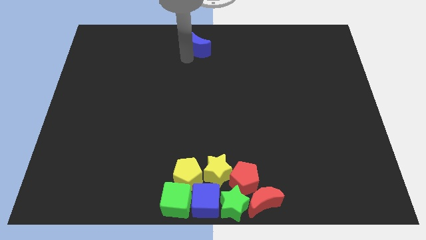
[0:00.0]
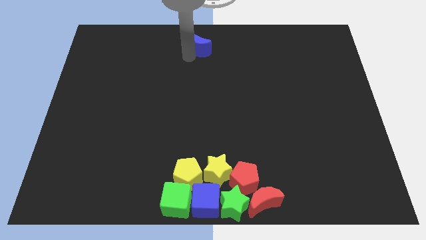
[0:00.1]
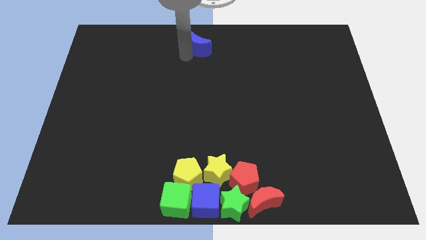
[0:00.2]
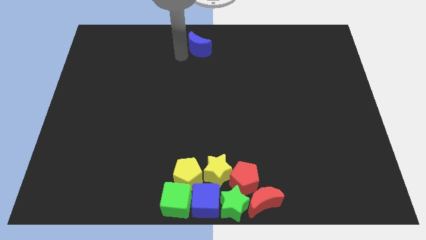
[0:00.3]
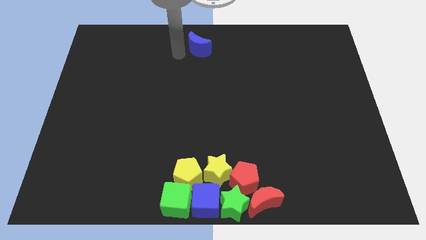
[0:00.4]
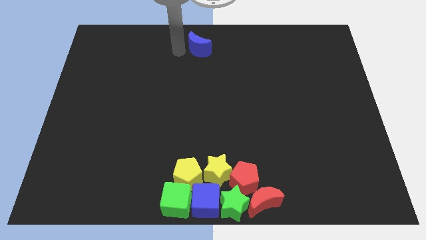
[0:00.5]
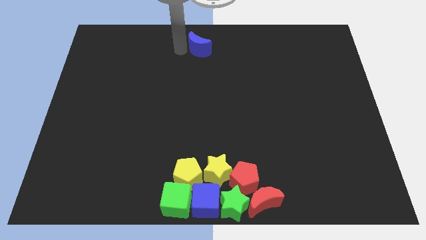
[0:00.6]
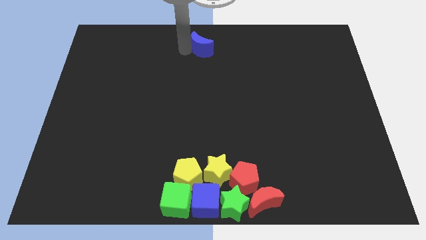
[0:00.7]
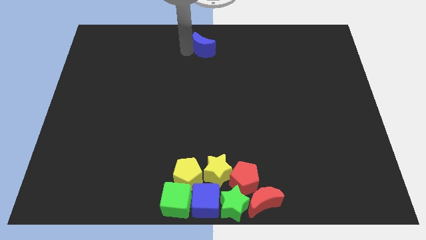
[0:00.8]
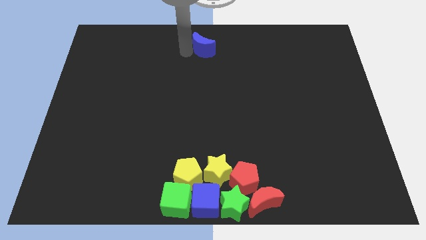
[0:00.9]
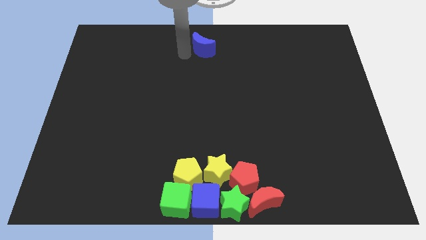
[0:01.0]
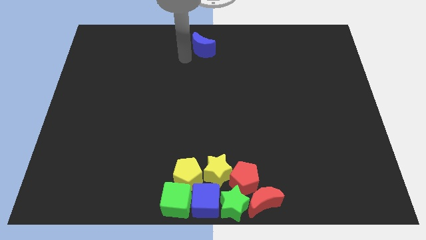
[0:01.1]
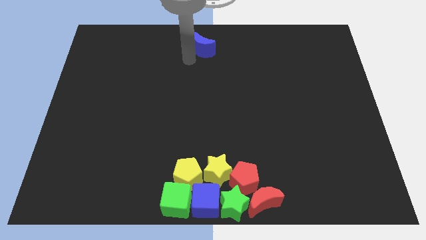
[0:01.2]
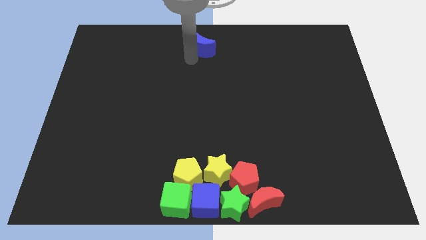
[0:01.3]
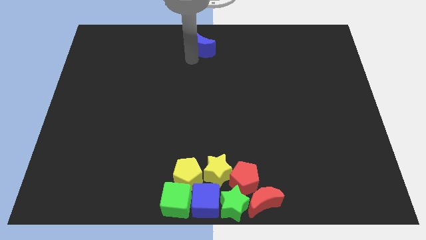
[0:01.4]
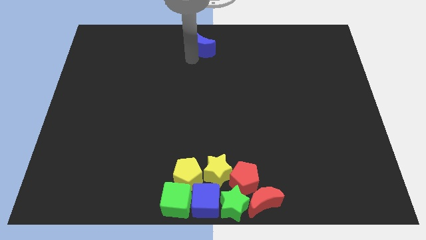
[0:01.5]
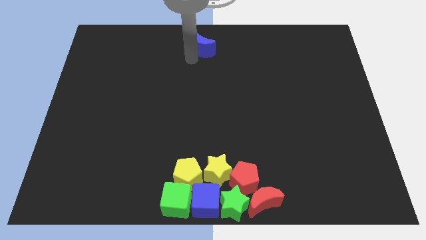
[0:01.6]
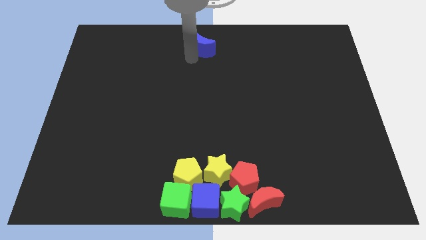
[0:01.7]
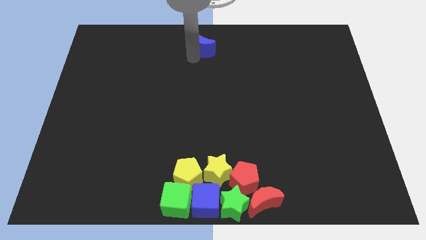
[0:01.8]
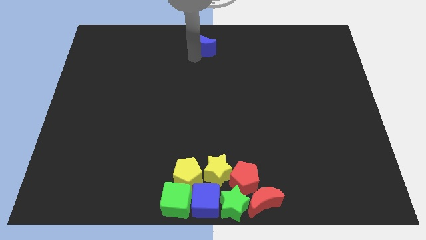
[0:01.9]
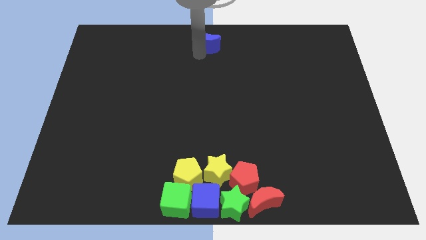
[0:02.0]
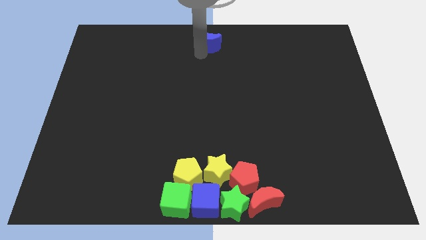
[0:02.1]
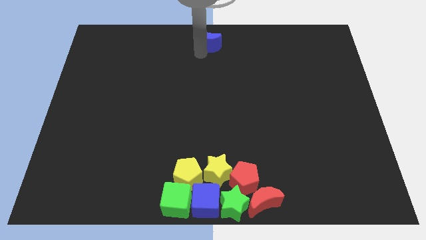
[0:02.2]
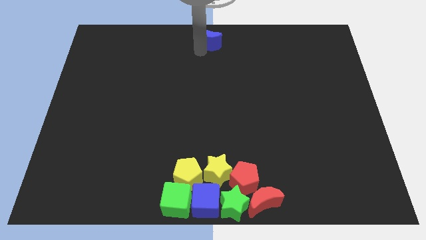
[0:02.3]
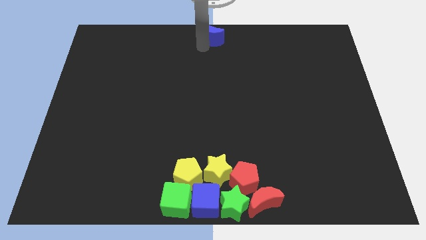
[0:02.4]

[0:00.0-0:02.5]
move the blue moon vertically to the top side of the yellow star

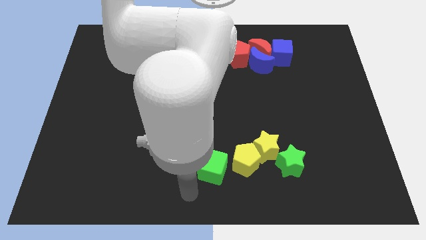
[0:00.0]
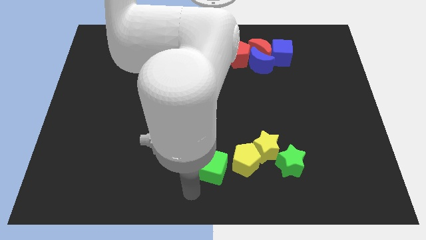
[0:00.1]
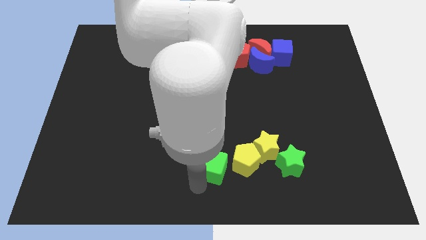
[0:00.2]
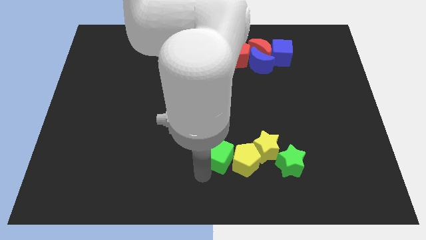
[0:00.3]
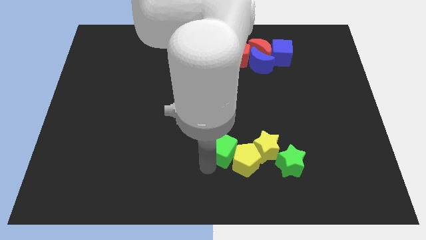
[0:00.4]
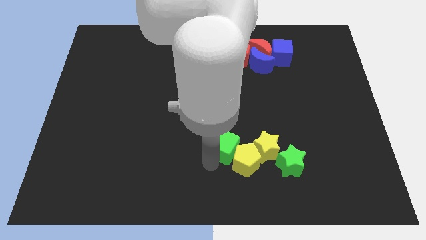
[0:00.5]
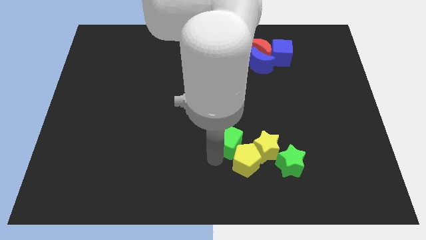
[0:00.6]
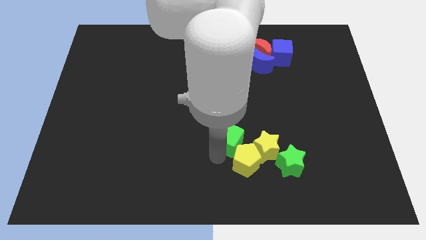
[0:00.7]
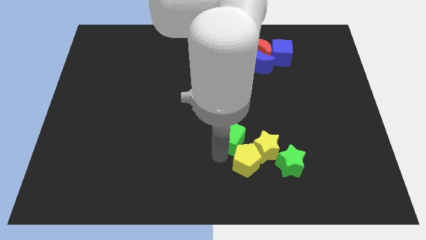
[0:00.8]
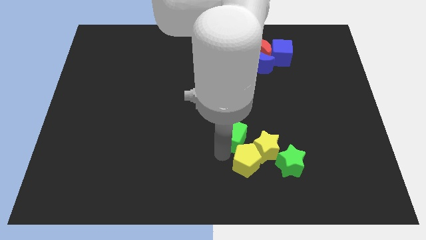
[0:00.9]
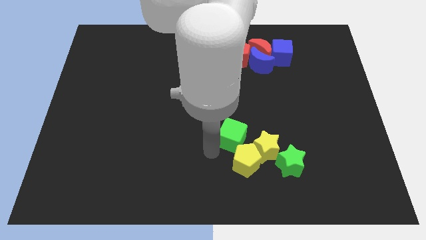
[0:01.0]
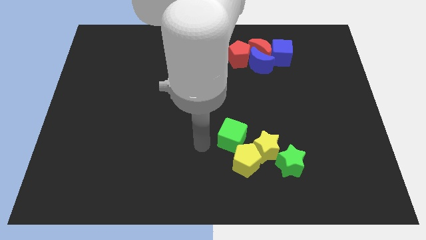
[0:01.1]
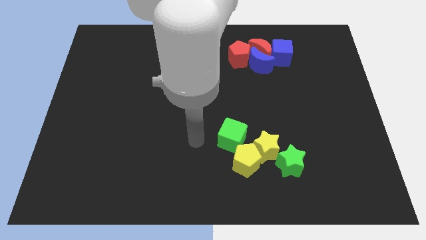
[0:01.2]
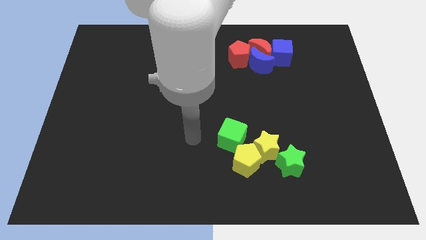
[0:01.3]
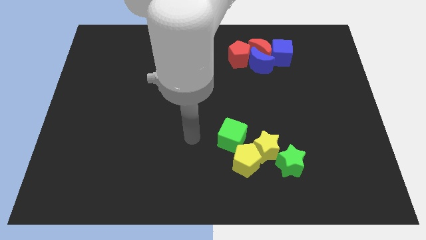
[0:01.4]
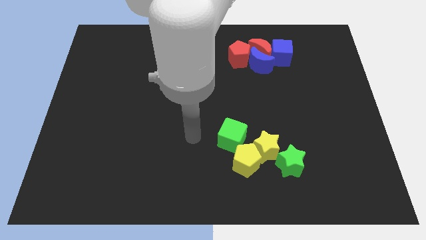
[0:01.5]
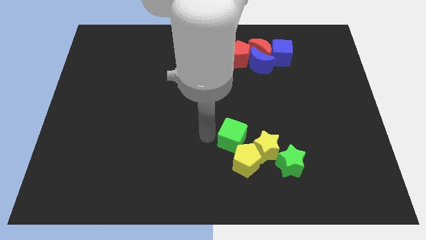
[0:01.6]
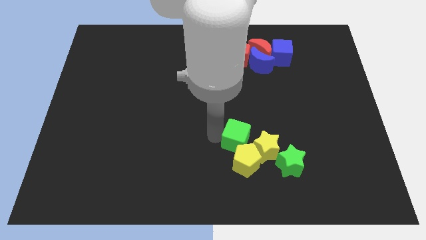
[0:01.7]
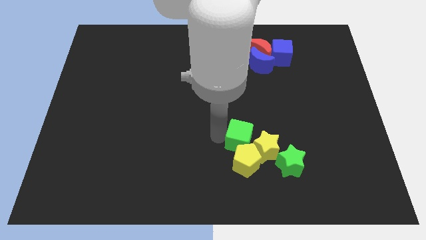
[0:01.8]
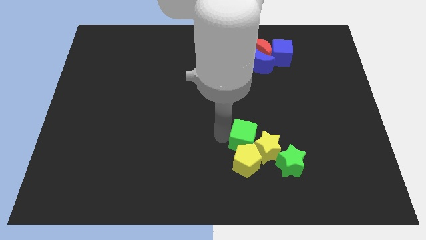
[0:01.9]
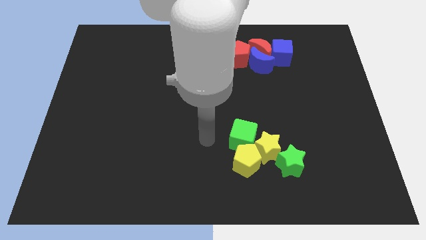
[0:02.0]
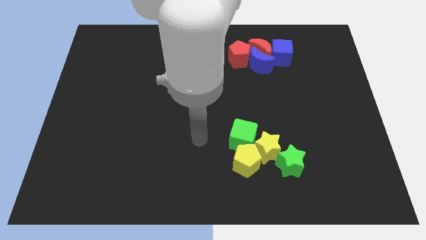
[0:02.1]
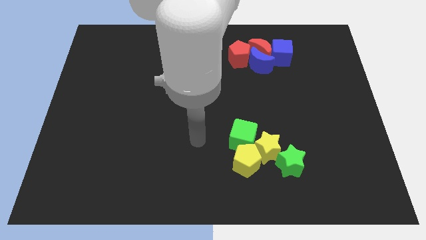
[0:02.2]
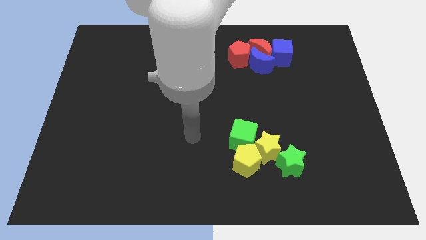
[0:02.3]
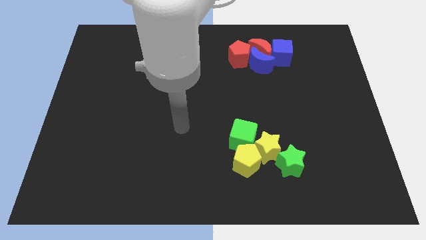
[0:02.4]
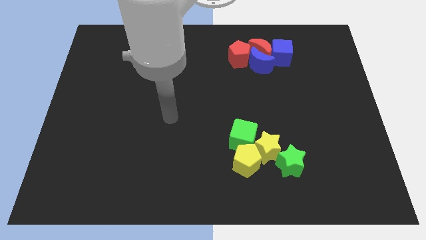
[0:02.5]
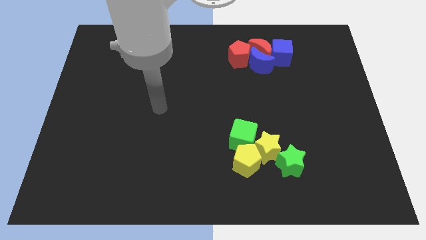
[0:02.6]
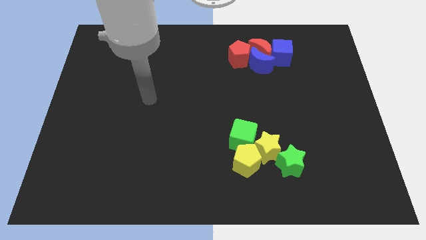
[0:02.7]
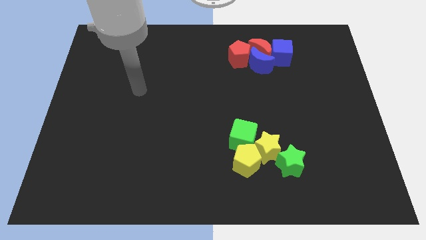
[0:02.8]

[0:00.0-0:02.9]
move the arm away from the green cube

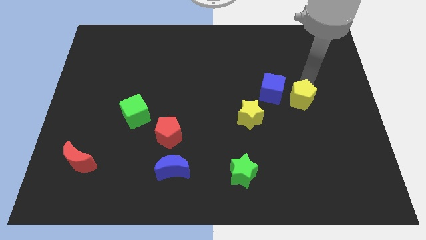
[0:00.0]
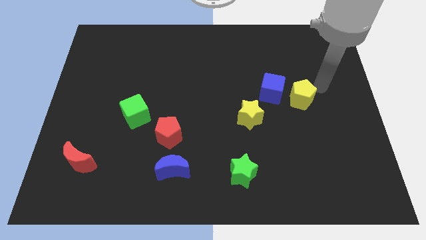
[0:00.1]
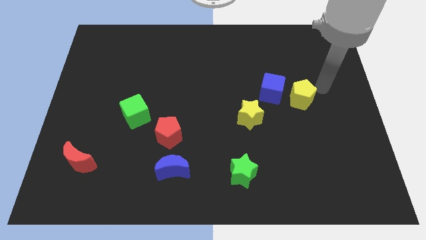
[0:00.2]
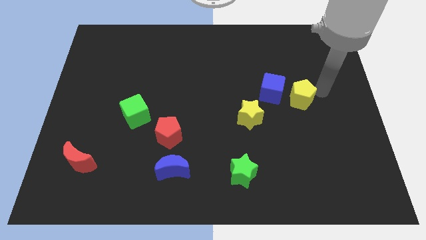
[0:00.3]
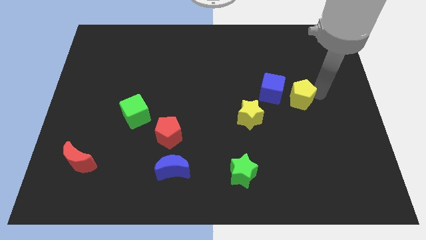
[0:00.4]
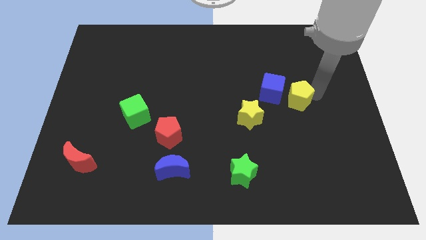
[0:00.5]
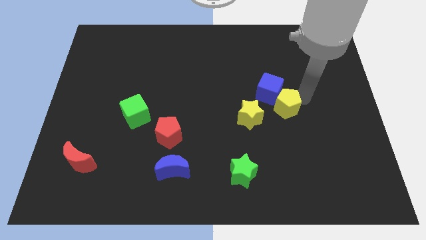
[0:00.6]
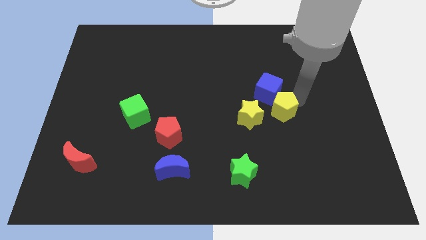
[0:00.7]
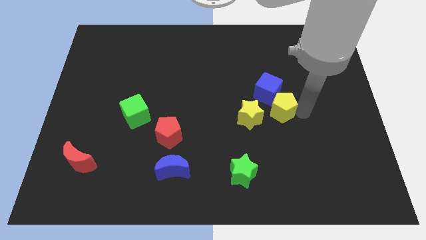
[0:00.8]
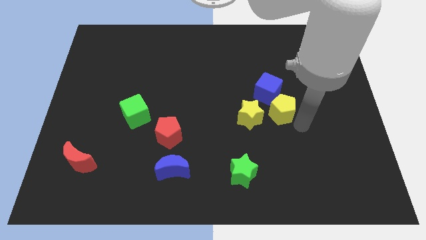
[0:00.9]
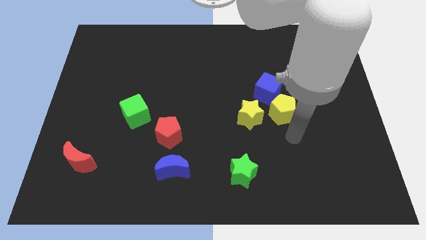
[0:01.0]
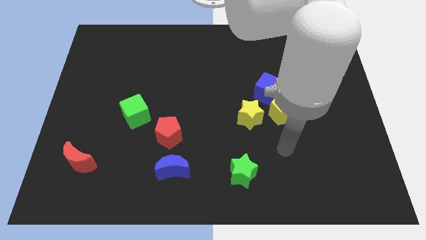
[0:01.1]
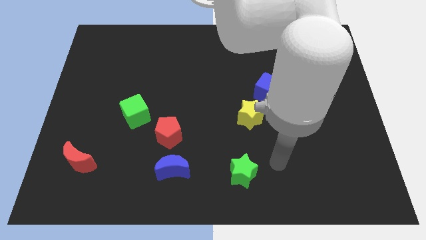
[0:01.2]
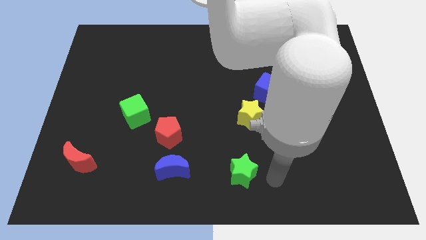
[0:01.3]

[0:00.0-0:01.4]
slightly push the yellow pentagon to the bottom of the board

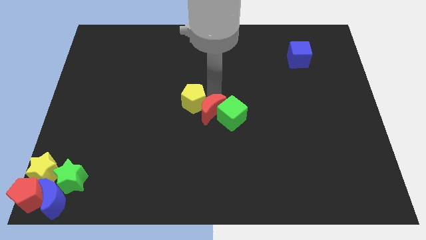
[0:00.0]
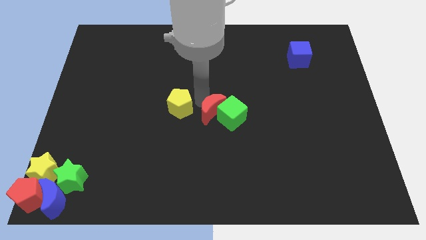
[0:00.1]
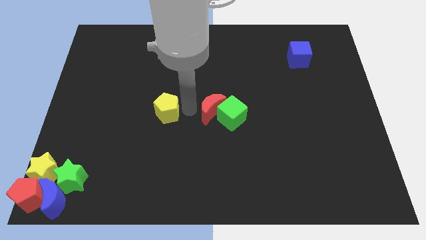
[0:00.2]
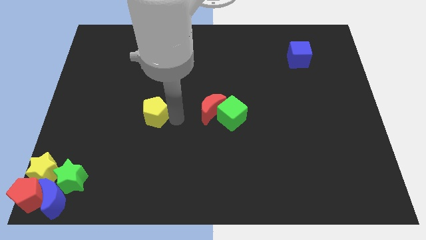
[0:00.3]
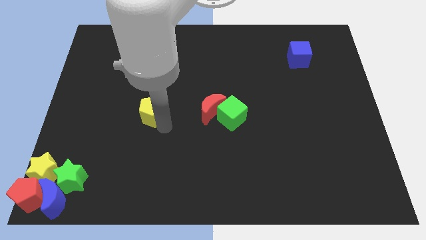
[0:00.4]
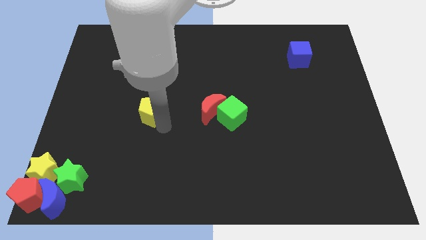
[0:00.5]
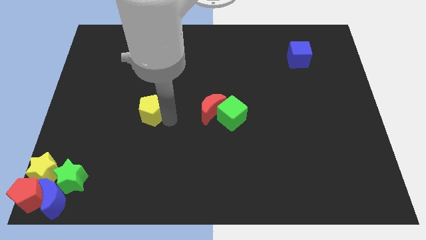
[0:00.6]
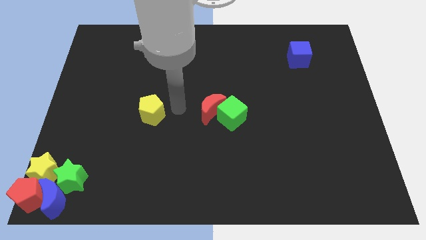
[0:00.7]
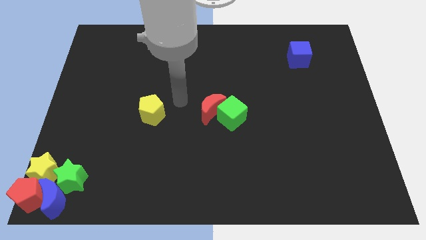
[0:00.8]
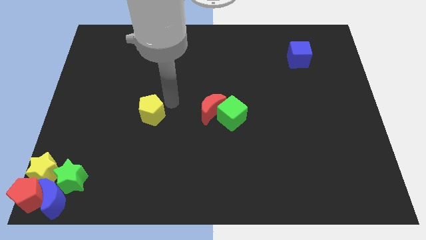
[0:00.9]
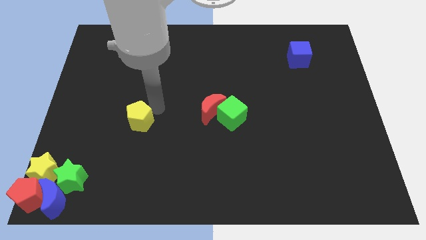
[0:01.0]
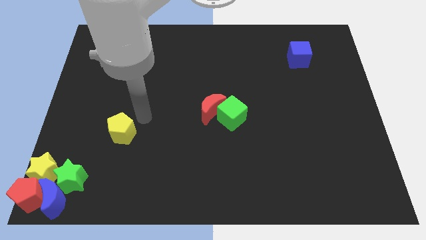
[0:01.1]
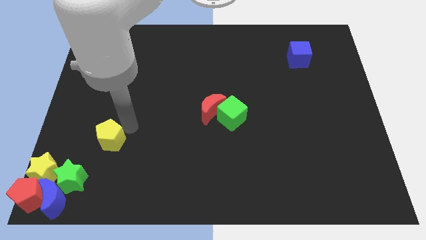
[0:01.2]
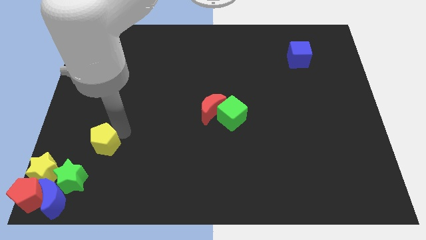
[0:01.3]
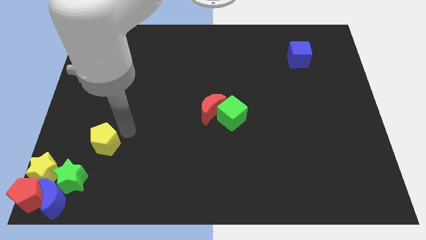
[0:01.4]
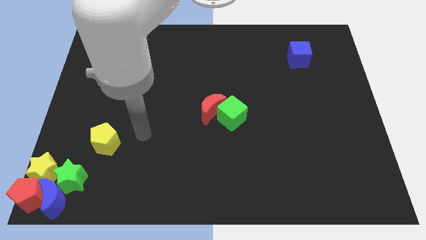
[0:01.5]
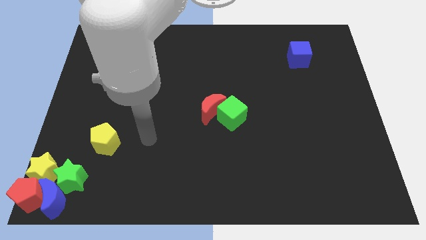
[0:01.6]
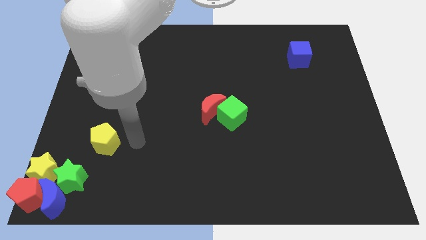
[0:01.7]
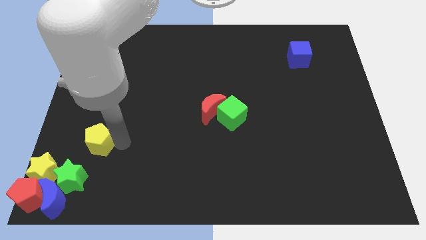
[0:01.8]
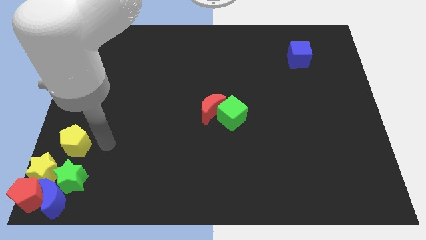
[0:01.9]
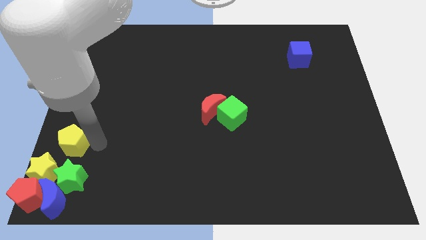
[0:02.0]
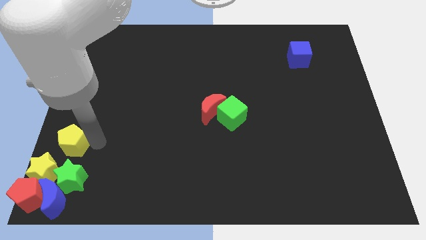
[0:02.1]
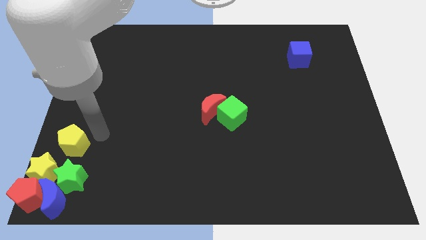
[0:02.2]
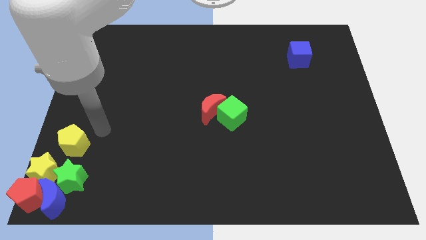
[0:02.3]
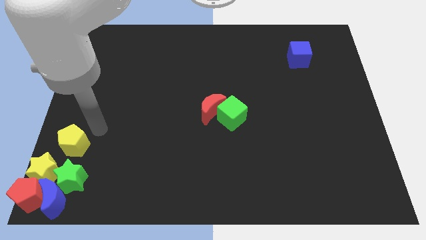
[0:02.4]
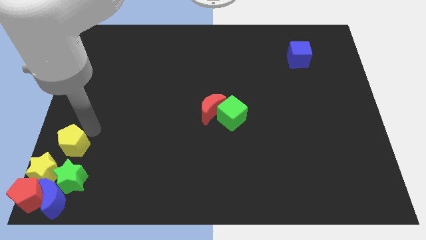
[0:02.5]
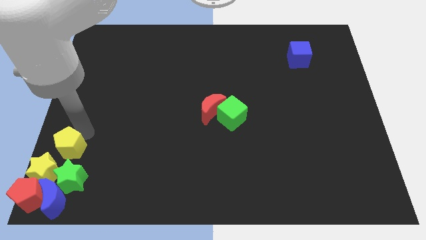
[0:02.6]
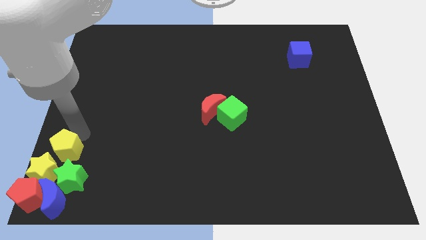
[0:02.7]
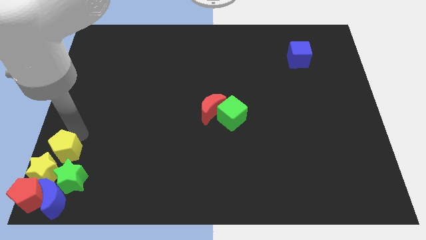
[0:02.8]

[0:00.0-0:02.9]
place the yellow pentagon at the top of stars
